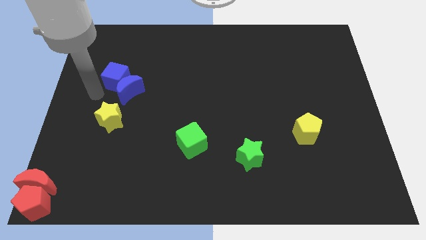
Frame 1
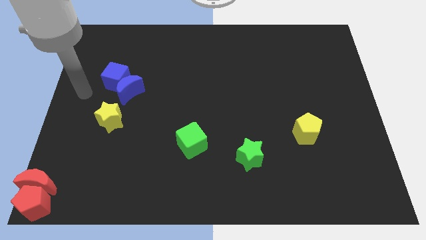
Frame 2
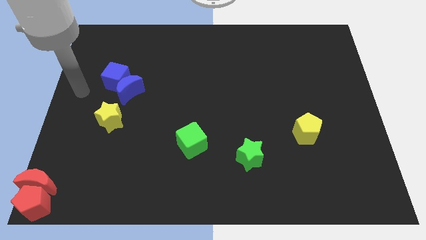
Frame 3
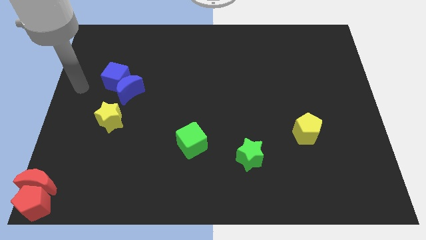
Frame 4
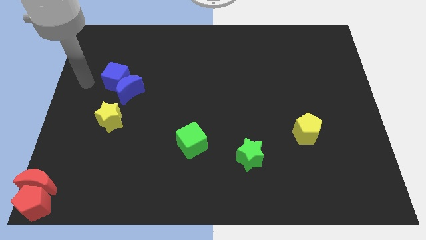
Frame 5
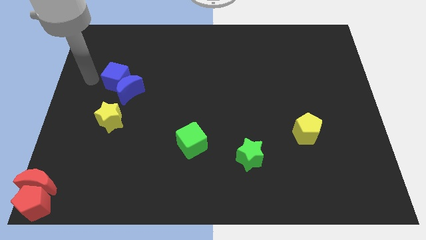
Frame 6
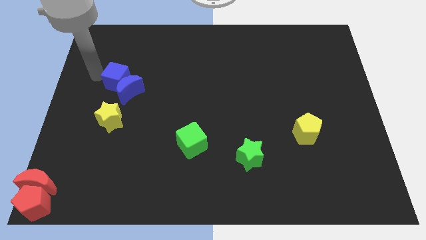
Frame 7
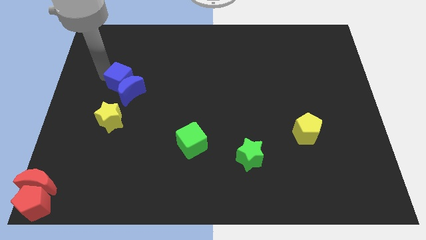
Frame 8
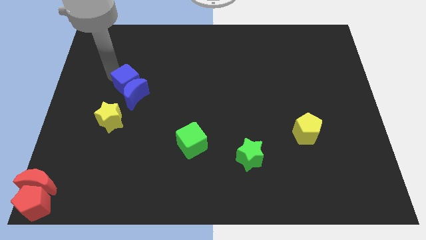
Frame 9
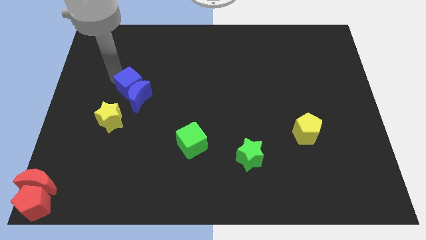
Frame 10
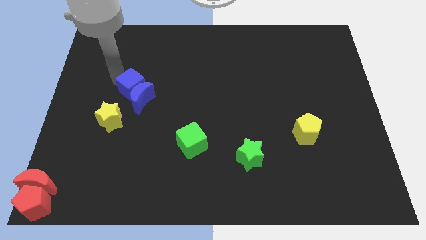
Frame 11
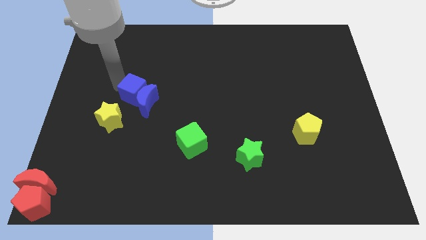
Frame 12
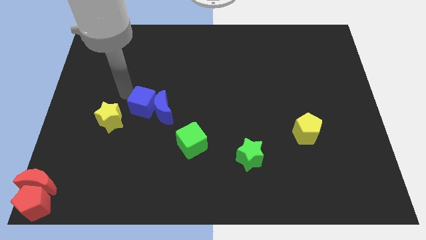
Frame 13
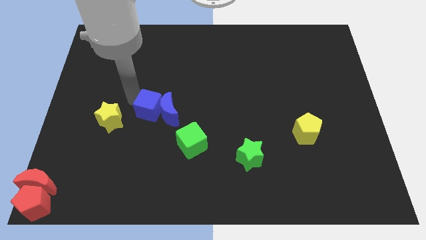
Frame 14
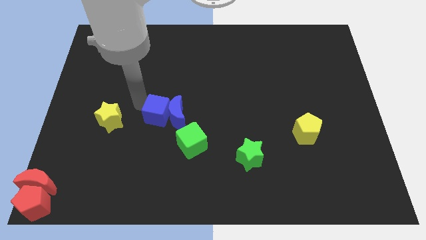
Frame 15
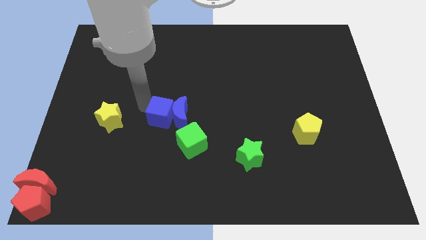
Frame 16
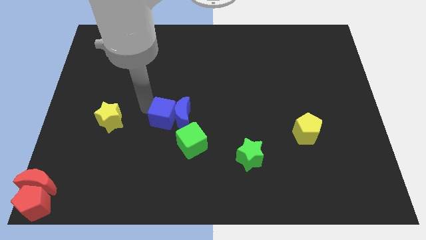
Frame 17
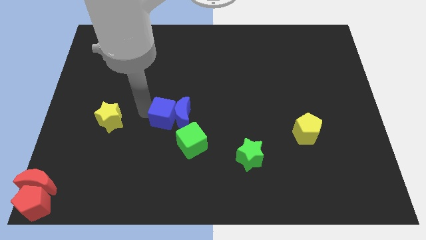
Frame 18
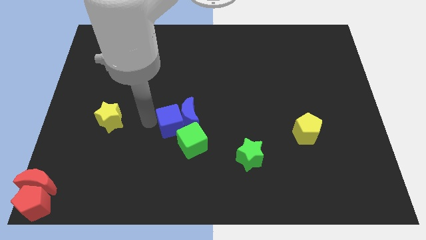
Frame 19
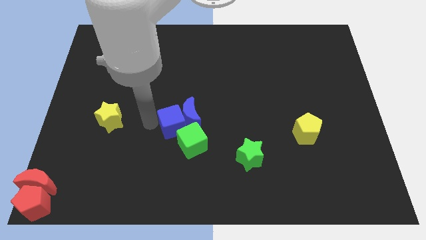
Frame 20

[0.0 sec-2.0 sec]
push the blue cube into the blue moon

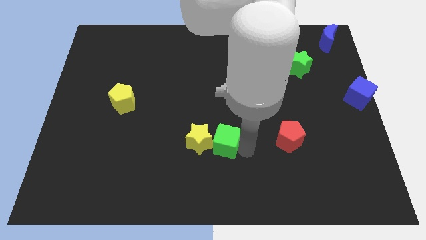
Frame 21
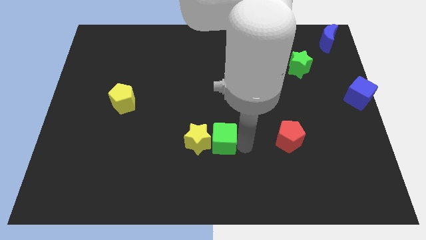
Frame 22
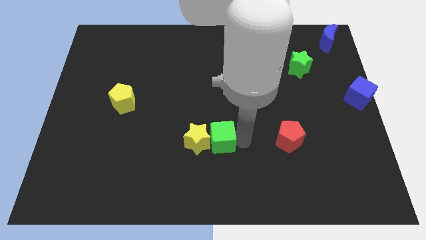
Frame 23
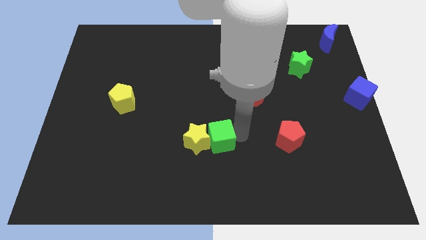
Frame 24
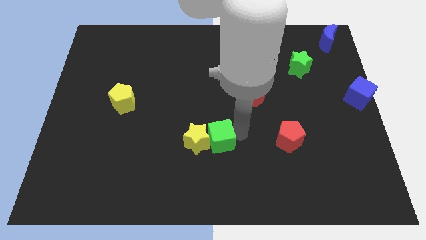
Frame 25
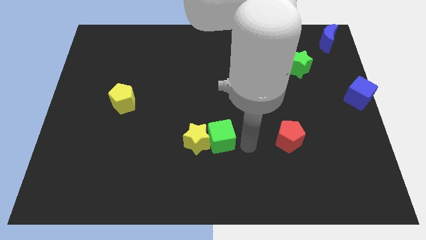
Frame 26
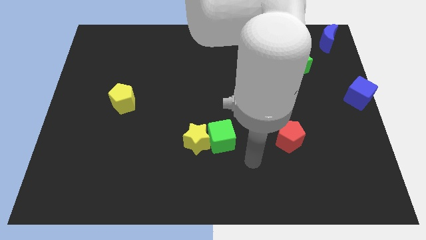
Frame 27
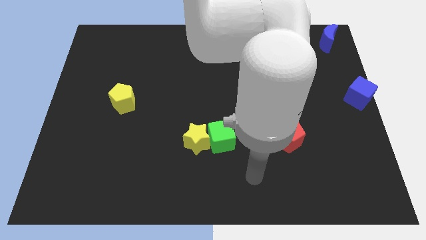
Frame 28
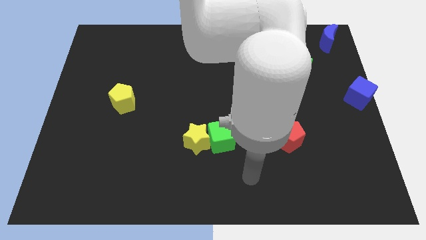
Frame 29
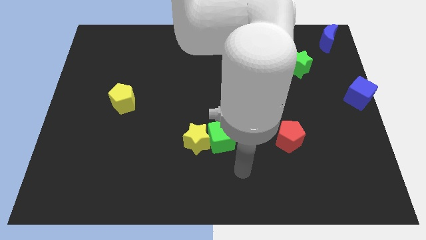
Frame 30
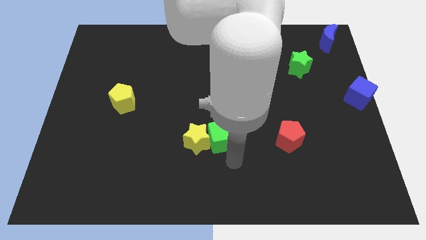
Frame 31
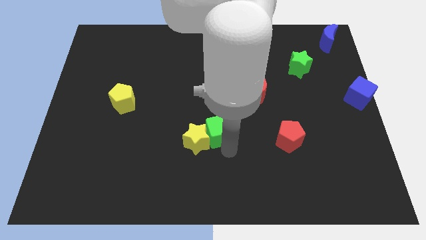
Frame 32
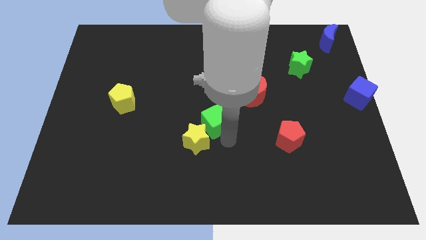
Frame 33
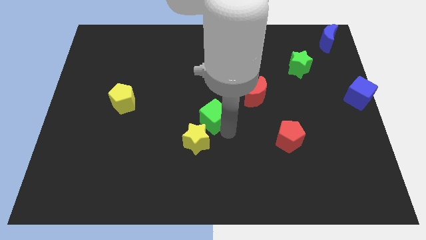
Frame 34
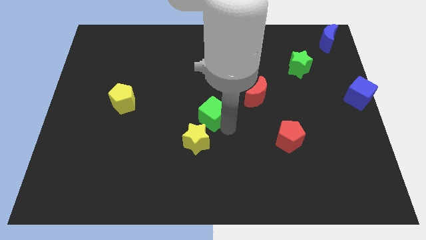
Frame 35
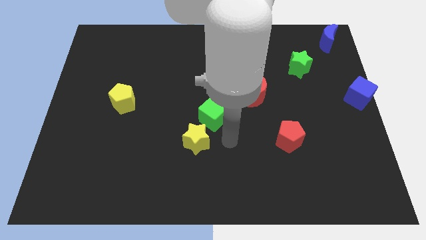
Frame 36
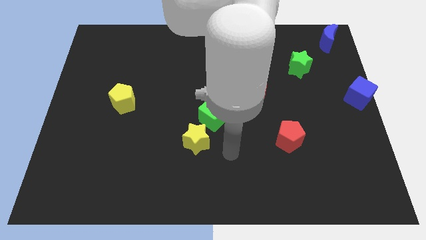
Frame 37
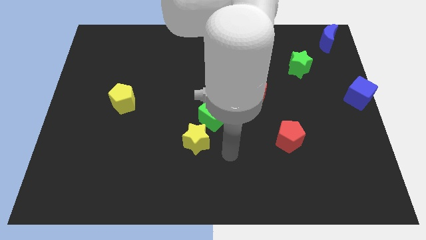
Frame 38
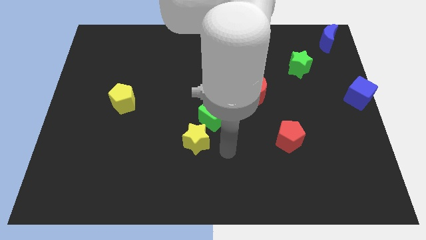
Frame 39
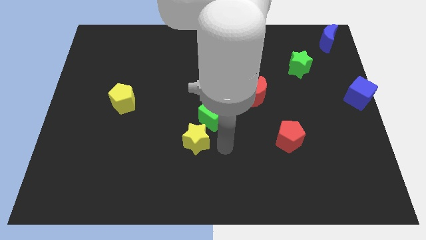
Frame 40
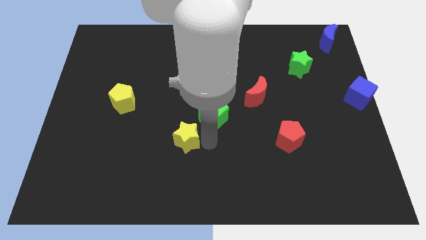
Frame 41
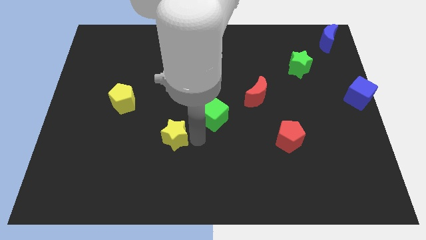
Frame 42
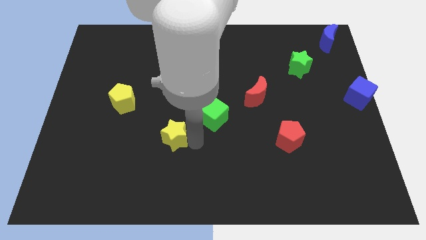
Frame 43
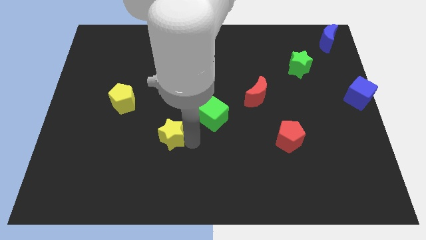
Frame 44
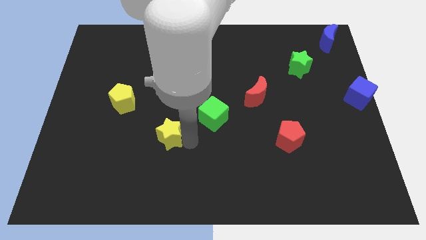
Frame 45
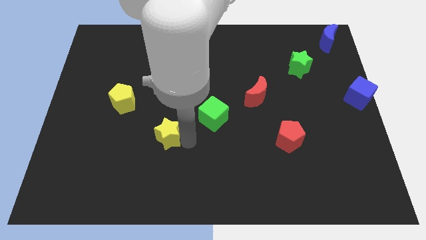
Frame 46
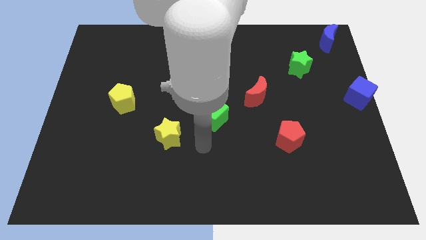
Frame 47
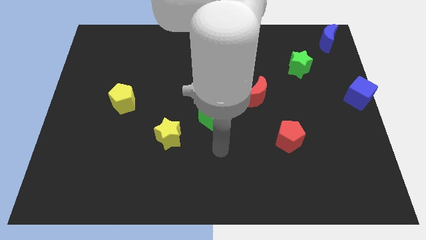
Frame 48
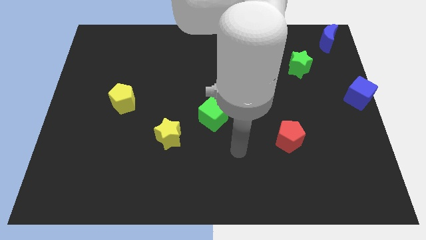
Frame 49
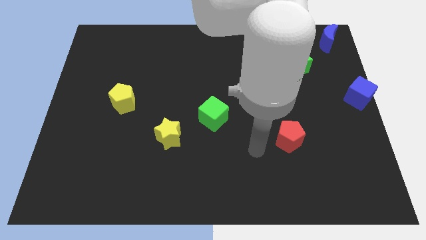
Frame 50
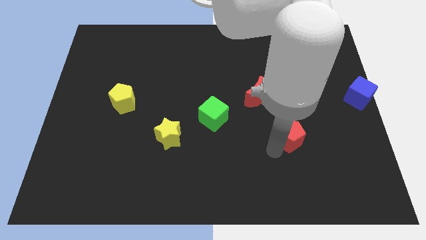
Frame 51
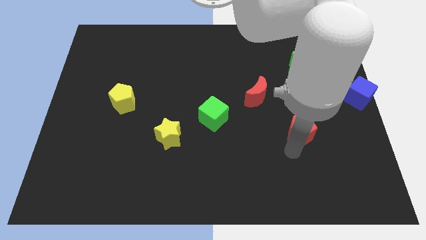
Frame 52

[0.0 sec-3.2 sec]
separate yellow star and the green cube

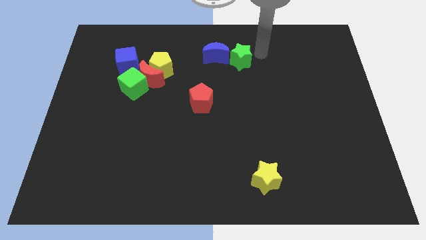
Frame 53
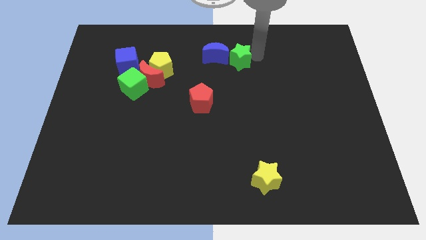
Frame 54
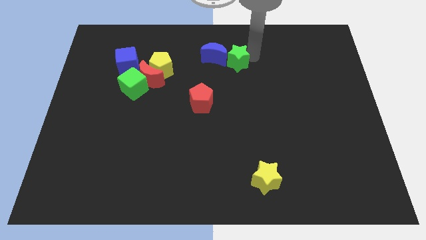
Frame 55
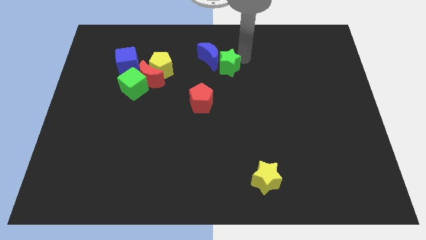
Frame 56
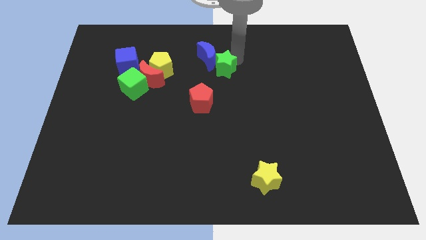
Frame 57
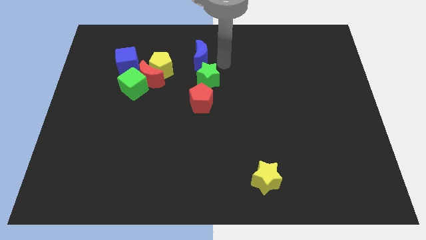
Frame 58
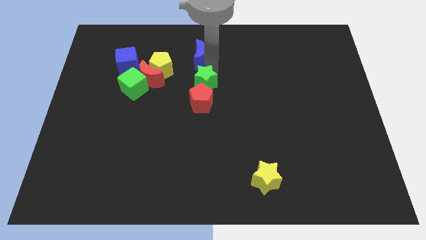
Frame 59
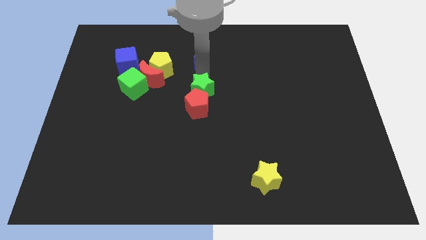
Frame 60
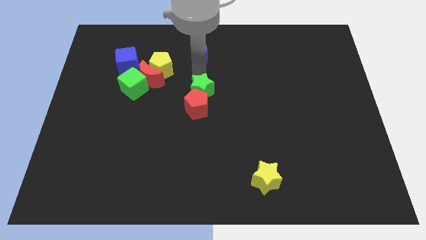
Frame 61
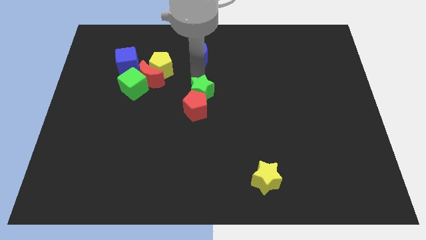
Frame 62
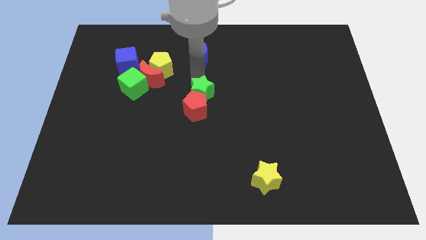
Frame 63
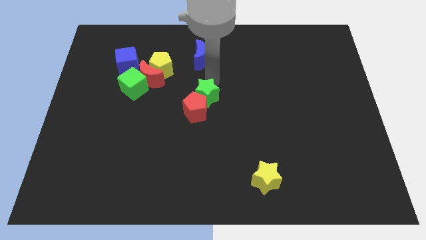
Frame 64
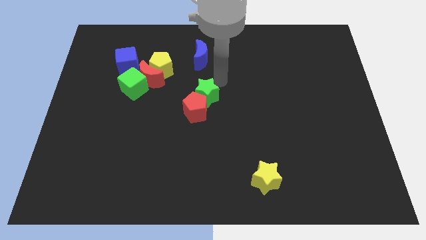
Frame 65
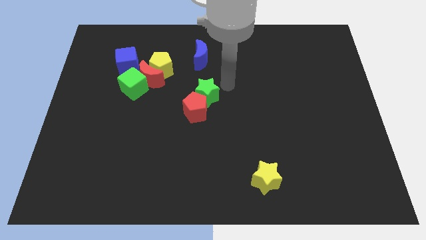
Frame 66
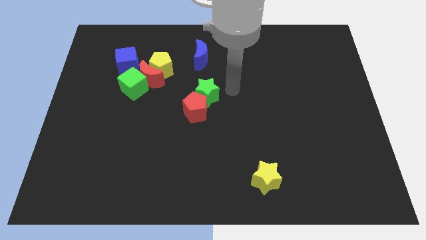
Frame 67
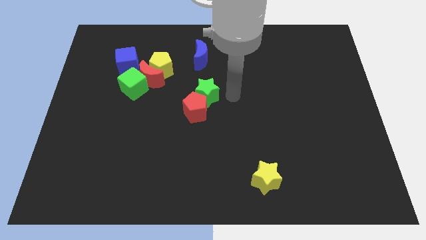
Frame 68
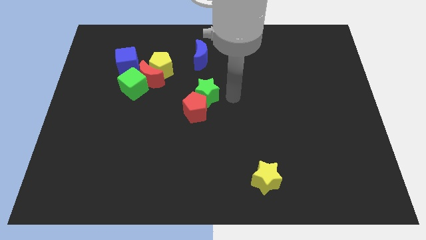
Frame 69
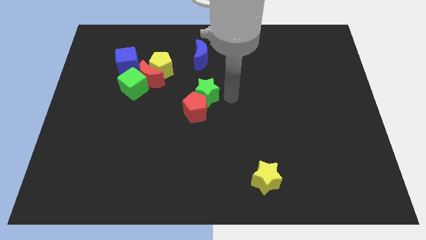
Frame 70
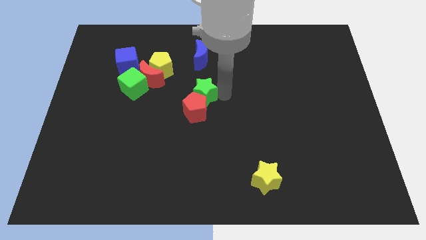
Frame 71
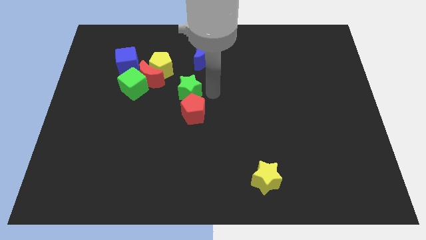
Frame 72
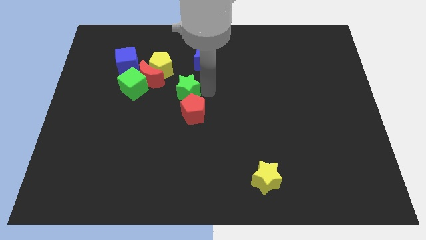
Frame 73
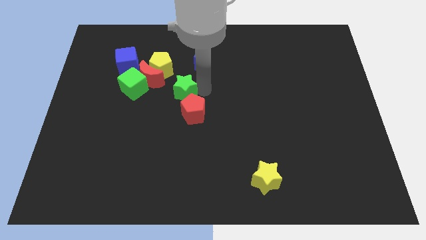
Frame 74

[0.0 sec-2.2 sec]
push the green star into the red pentagon

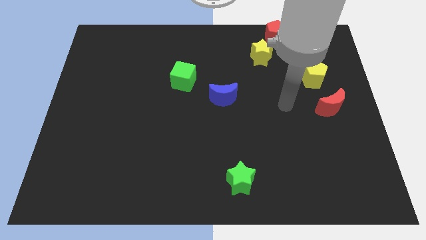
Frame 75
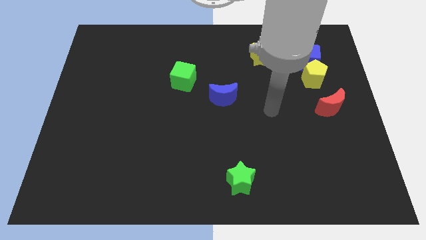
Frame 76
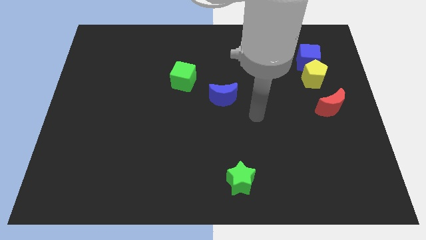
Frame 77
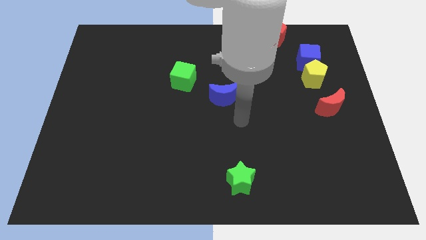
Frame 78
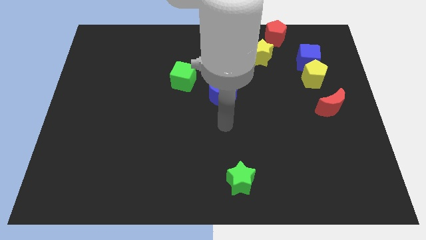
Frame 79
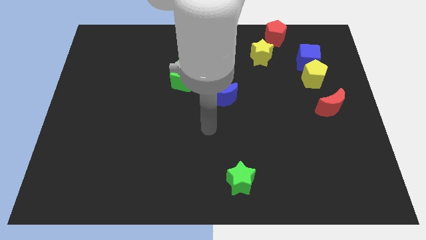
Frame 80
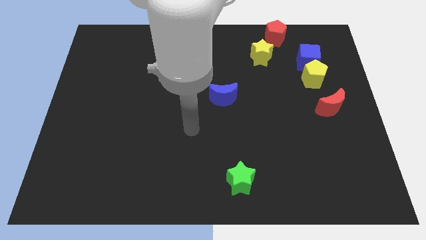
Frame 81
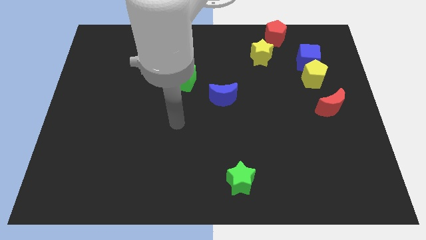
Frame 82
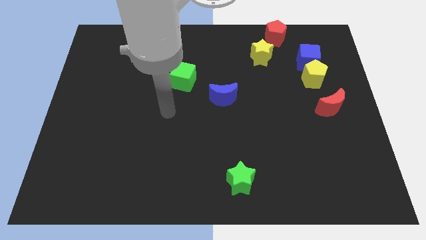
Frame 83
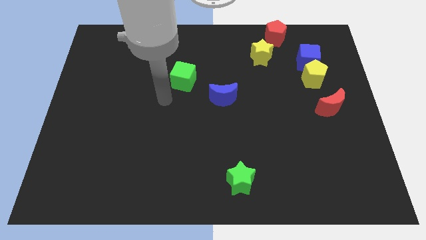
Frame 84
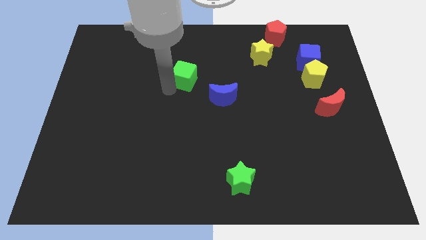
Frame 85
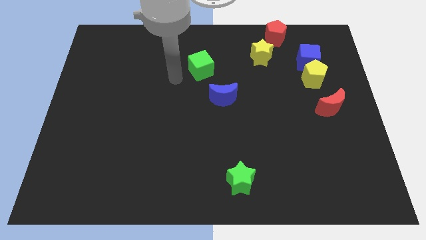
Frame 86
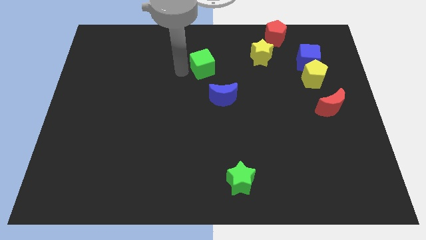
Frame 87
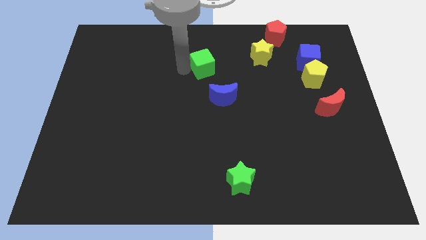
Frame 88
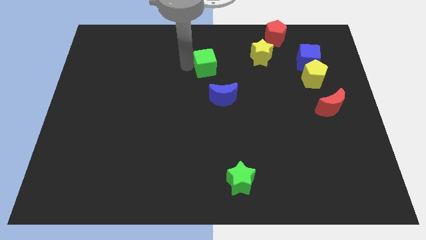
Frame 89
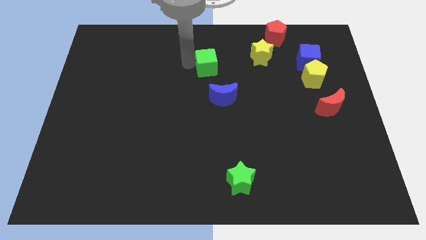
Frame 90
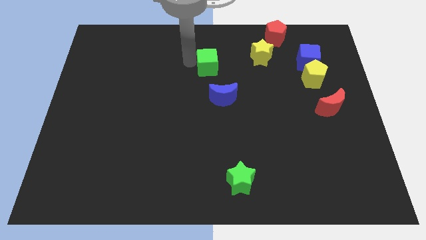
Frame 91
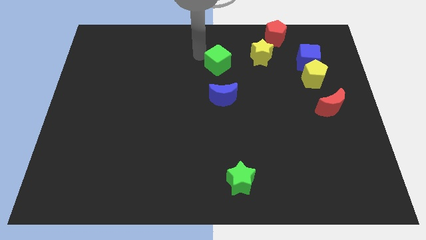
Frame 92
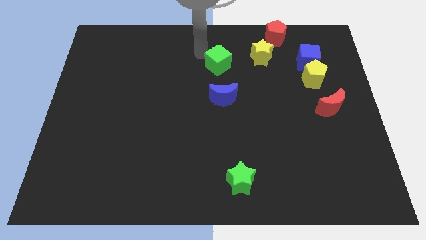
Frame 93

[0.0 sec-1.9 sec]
place the green cube vertically above the blue semicircle
